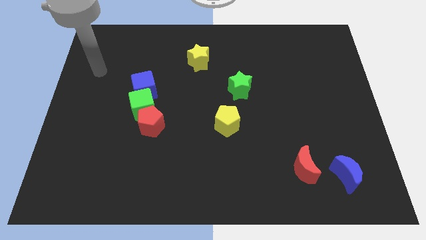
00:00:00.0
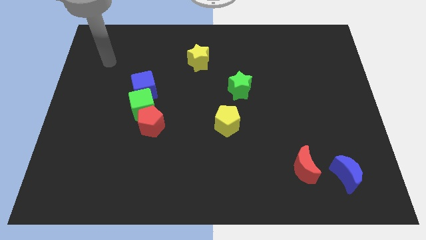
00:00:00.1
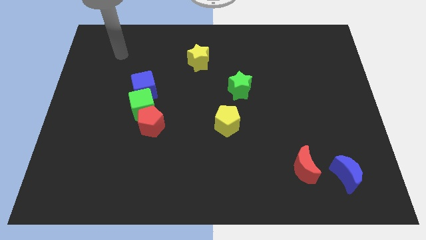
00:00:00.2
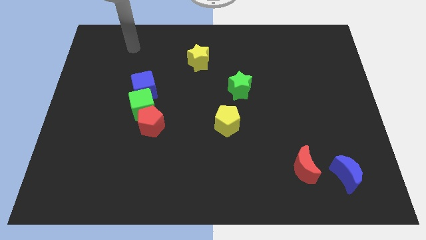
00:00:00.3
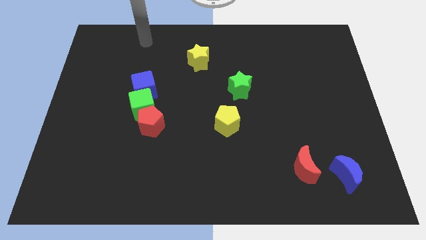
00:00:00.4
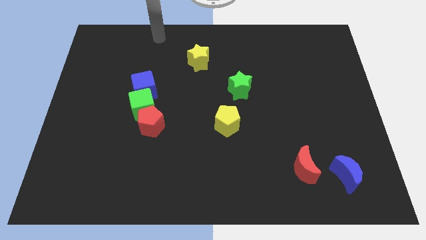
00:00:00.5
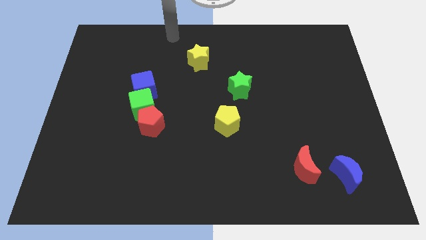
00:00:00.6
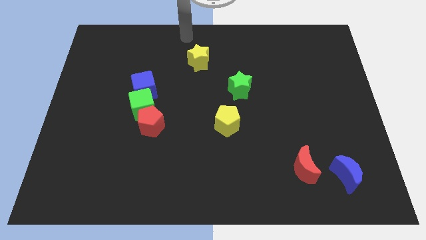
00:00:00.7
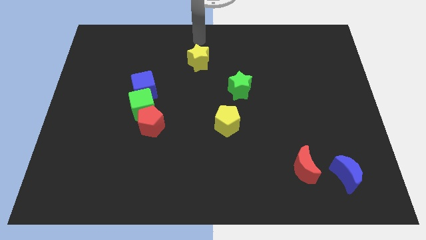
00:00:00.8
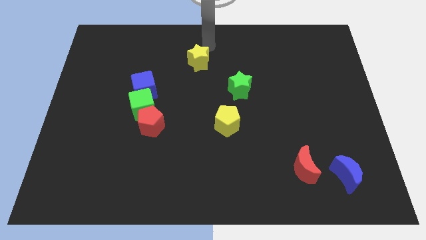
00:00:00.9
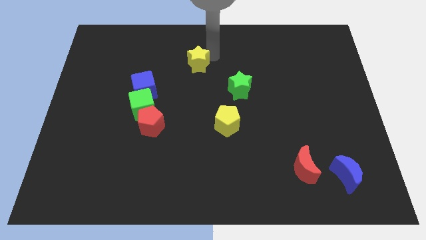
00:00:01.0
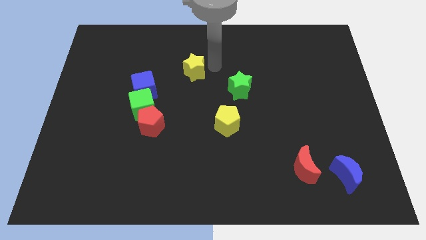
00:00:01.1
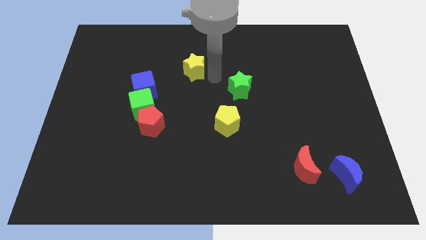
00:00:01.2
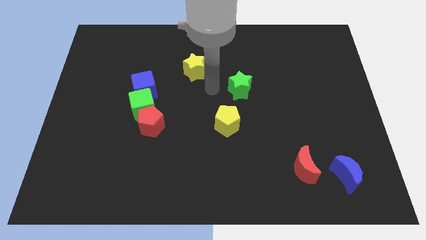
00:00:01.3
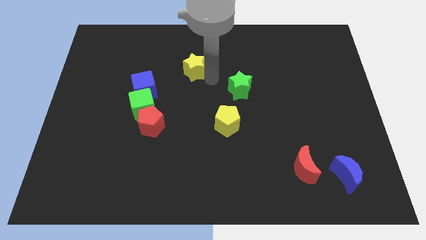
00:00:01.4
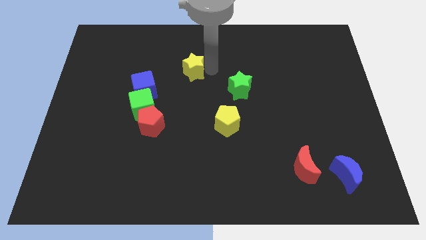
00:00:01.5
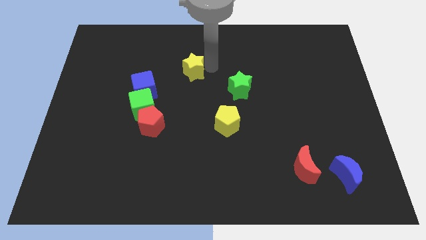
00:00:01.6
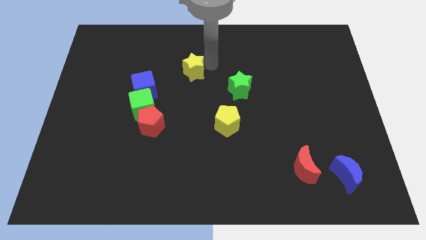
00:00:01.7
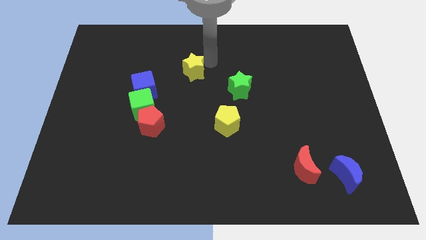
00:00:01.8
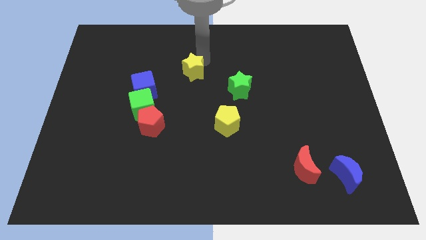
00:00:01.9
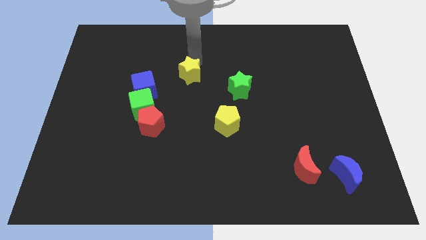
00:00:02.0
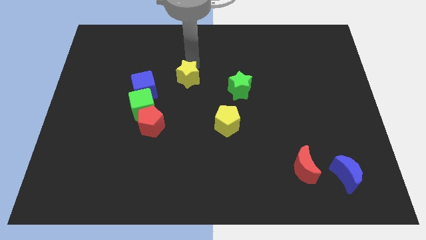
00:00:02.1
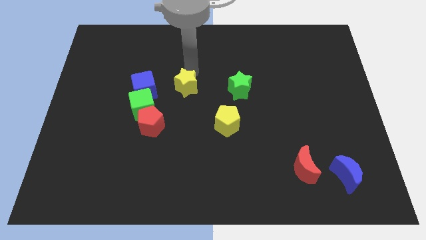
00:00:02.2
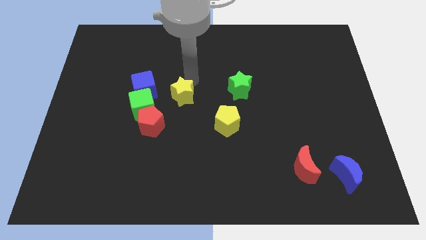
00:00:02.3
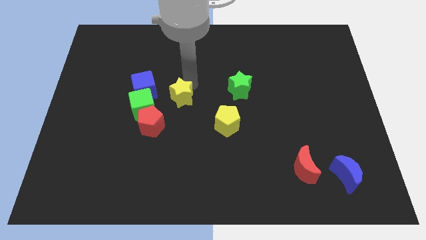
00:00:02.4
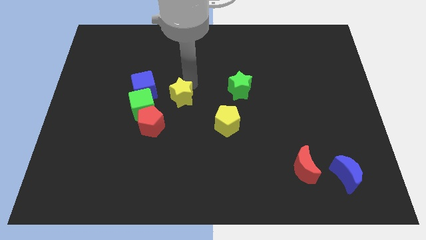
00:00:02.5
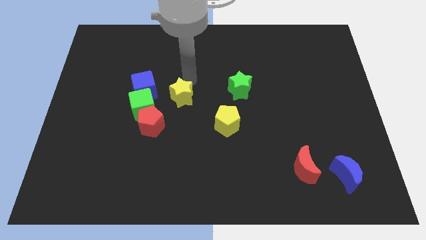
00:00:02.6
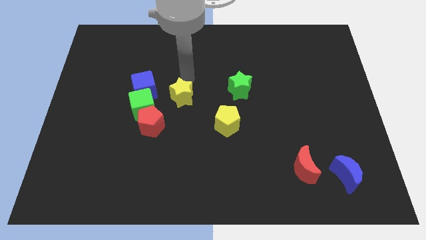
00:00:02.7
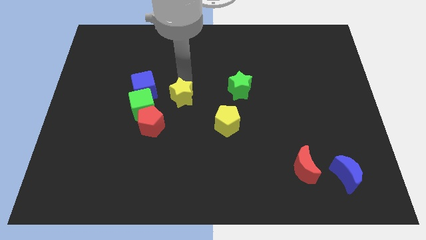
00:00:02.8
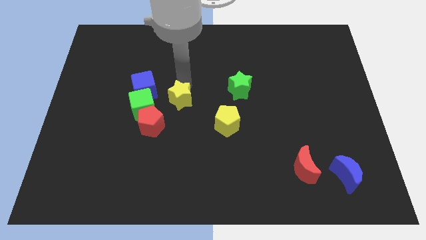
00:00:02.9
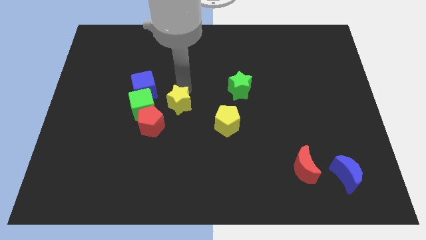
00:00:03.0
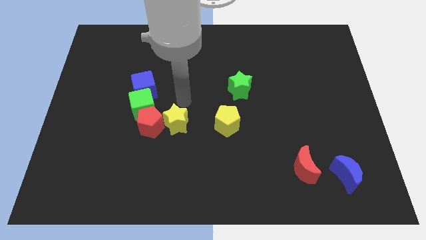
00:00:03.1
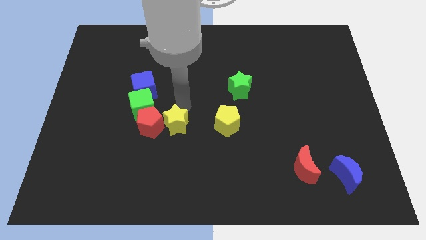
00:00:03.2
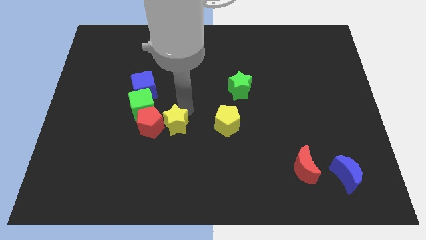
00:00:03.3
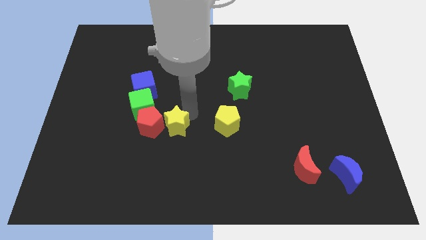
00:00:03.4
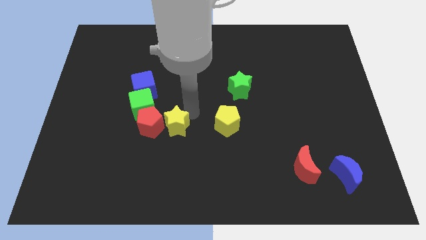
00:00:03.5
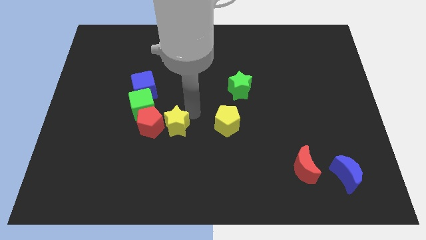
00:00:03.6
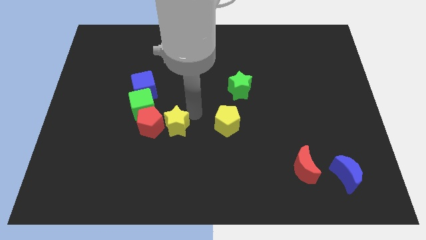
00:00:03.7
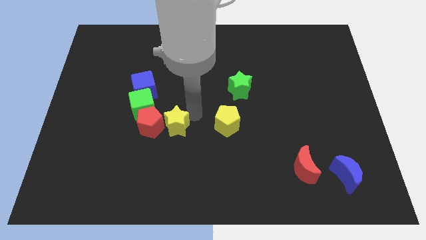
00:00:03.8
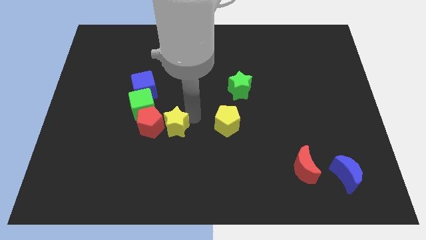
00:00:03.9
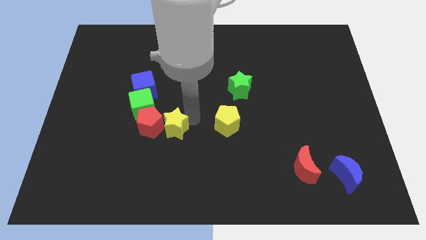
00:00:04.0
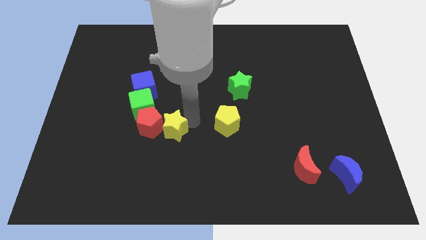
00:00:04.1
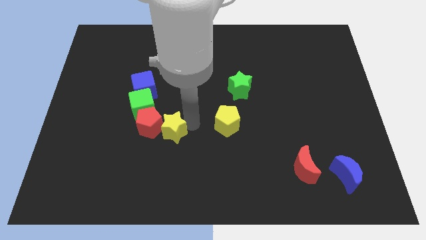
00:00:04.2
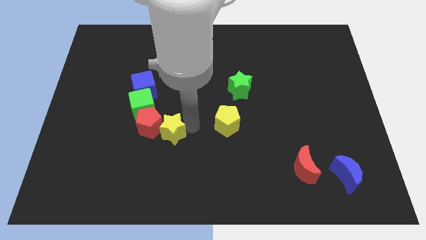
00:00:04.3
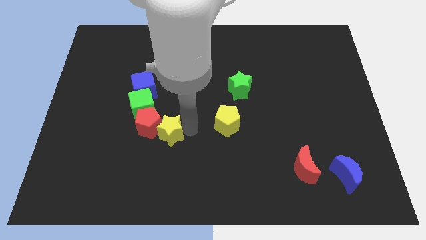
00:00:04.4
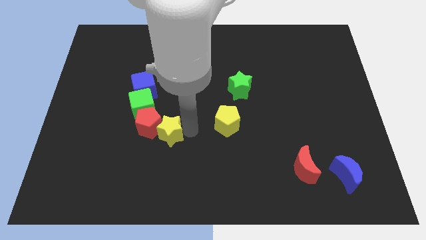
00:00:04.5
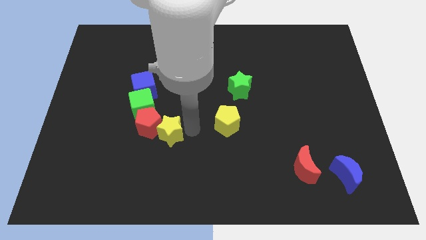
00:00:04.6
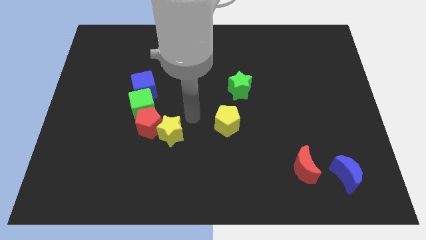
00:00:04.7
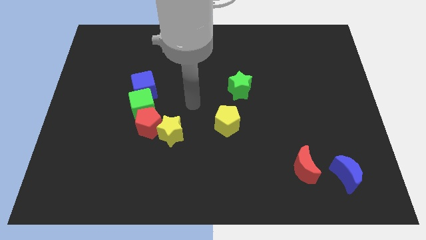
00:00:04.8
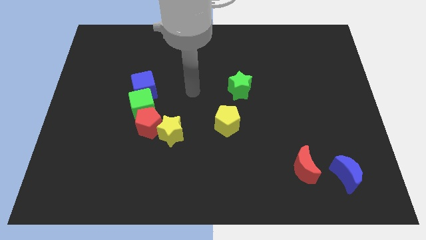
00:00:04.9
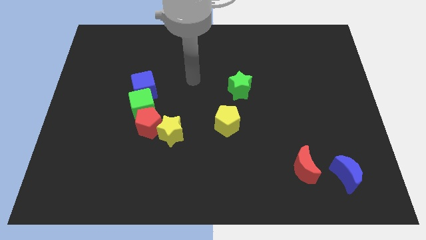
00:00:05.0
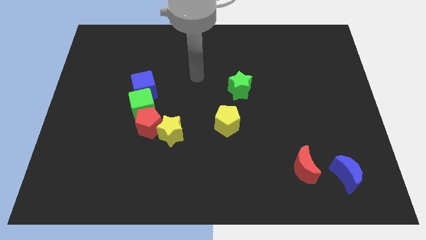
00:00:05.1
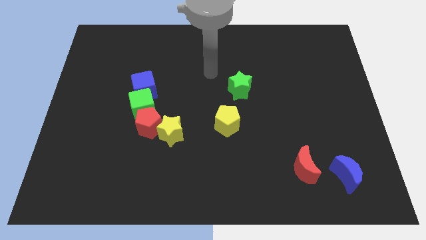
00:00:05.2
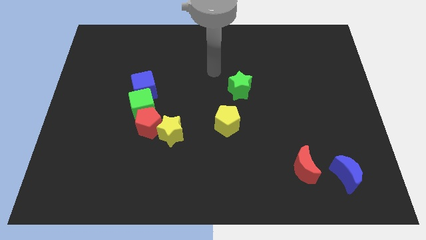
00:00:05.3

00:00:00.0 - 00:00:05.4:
move the yellow star left to the yellow pentagon

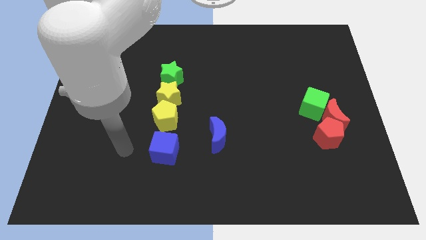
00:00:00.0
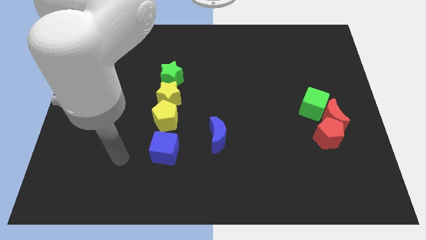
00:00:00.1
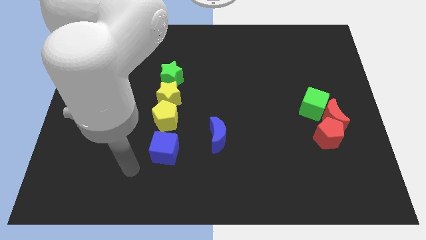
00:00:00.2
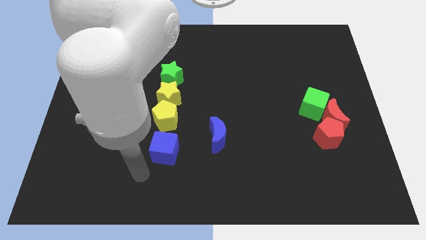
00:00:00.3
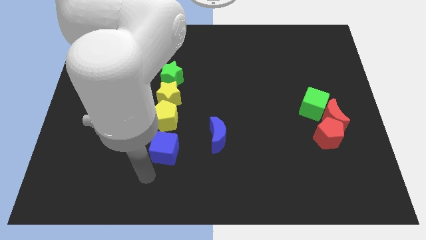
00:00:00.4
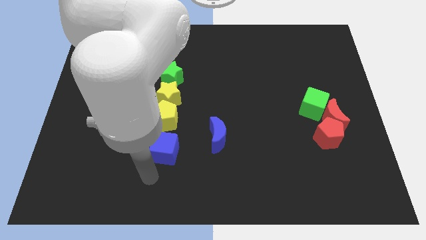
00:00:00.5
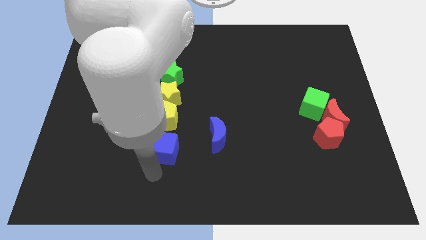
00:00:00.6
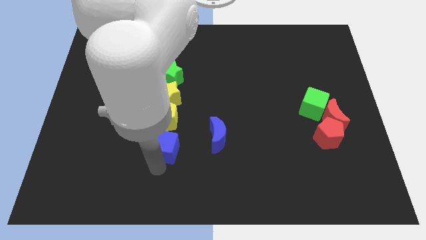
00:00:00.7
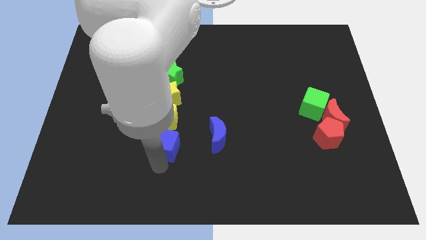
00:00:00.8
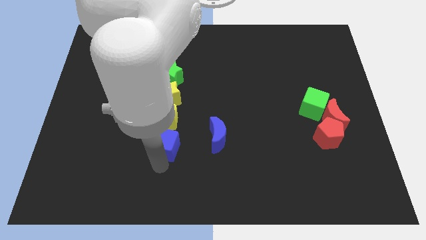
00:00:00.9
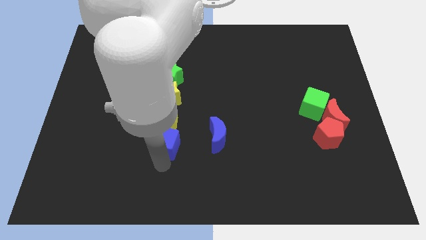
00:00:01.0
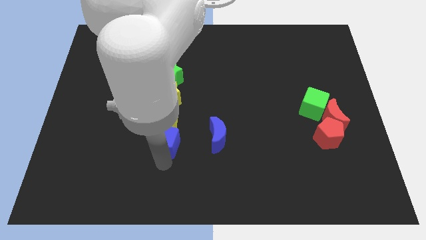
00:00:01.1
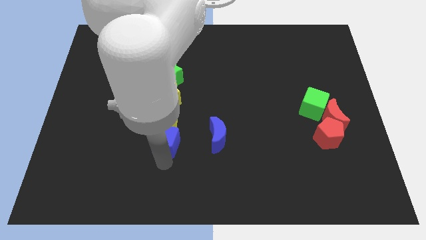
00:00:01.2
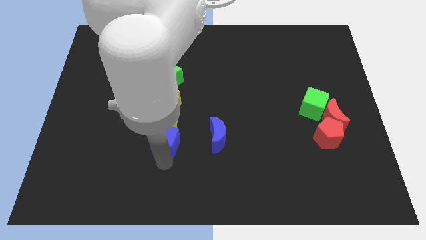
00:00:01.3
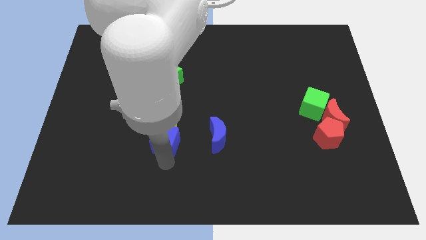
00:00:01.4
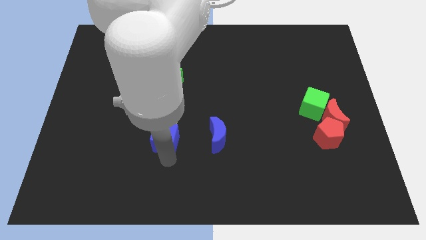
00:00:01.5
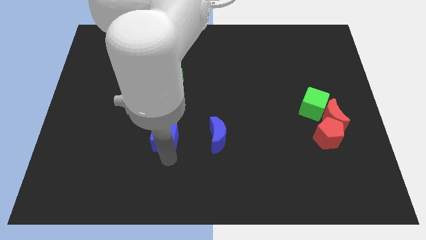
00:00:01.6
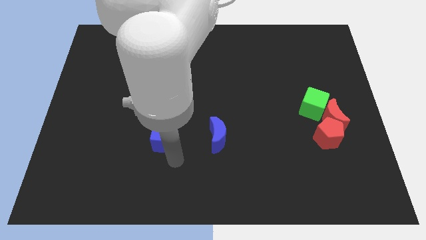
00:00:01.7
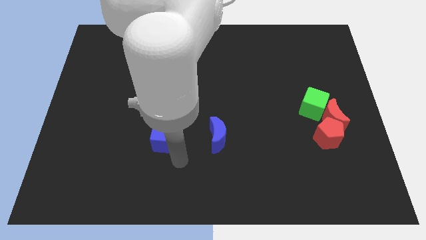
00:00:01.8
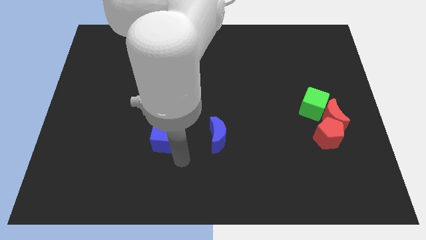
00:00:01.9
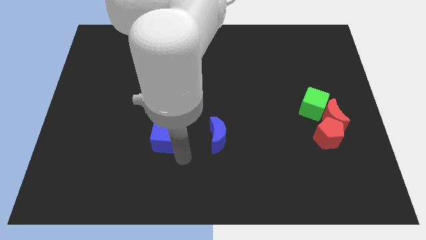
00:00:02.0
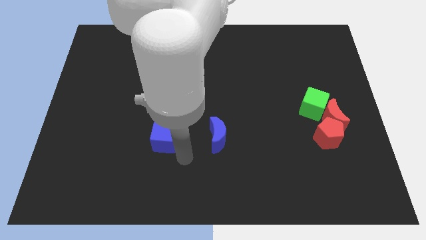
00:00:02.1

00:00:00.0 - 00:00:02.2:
push the blue cube upwards slightly

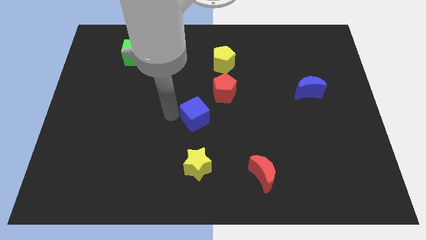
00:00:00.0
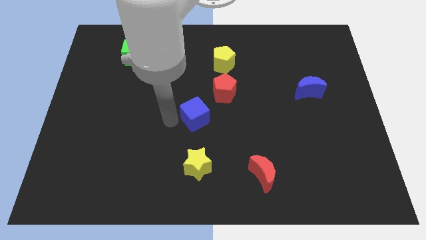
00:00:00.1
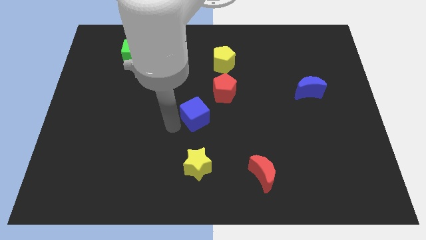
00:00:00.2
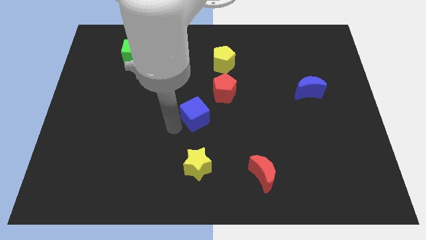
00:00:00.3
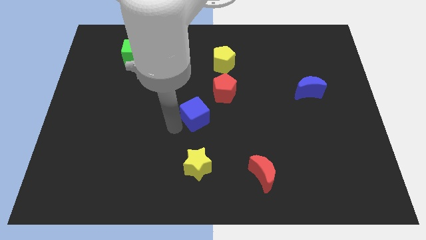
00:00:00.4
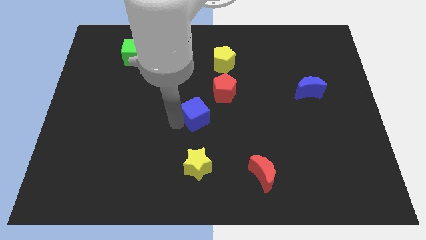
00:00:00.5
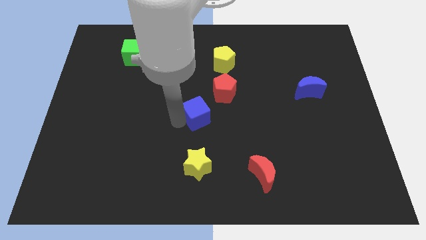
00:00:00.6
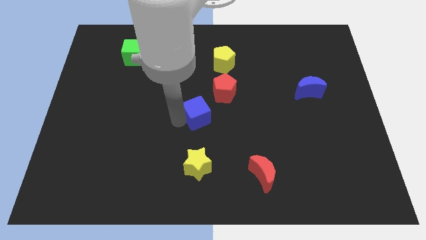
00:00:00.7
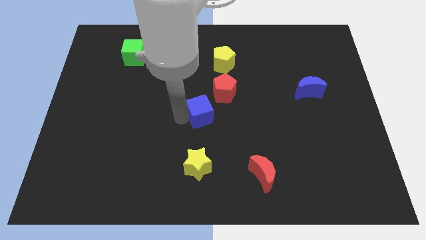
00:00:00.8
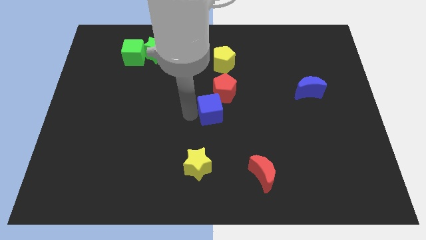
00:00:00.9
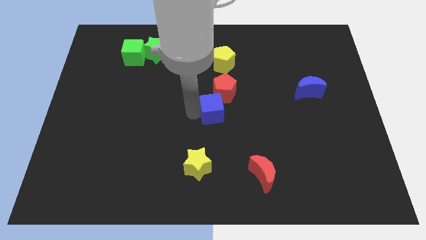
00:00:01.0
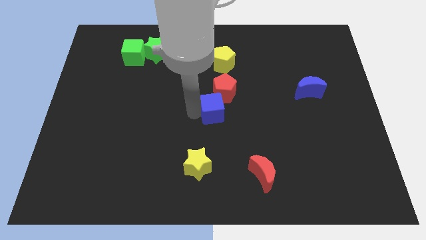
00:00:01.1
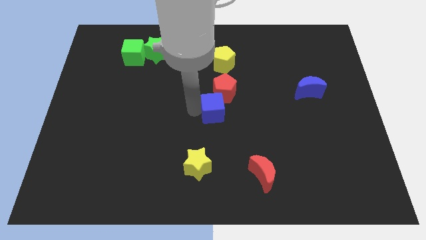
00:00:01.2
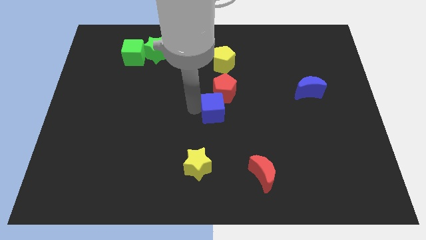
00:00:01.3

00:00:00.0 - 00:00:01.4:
move blue cube towards red pentagon
